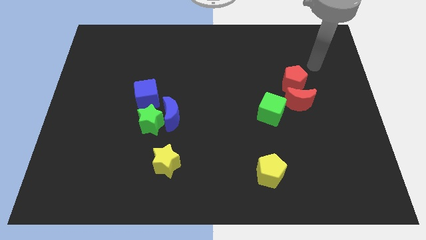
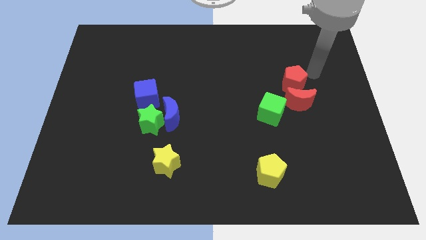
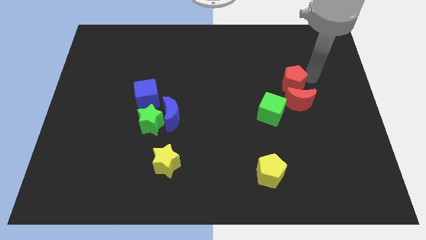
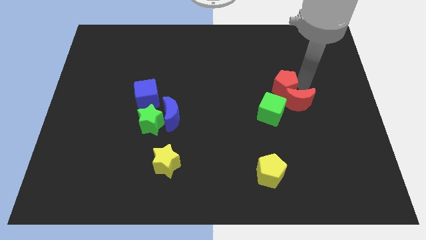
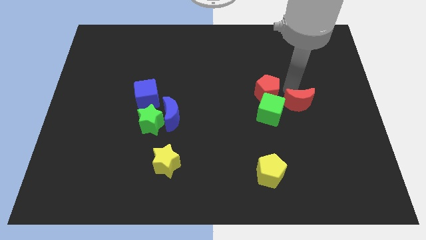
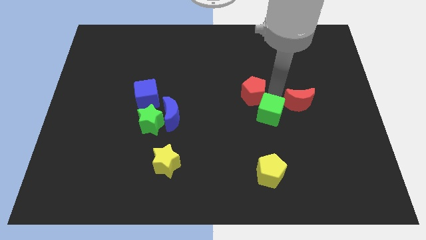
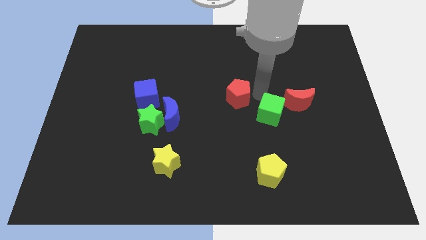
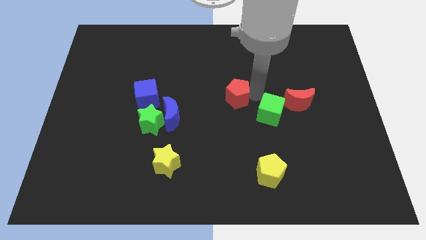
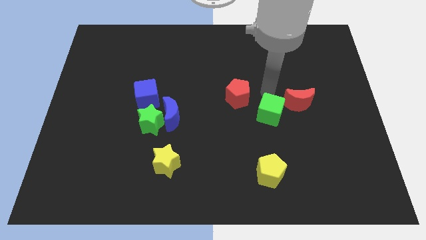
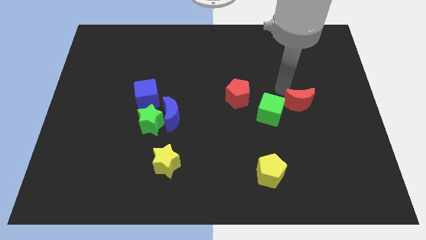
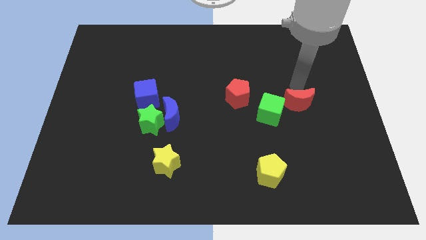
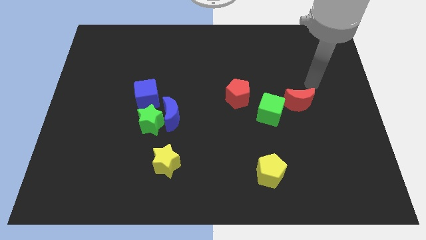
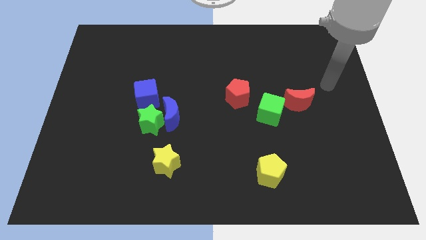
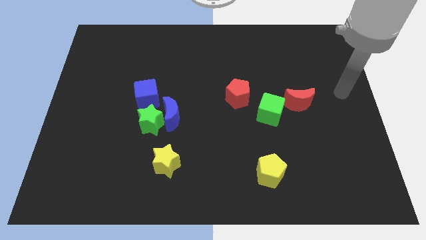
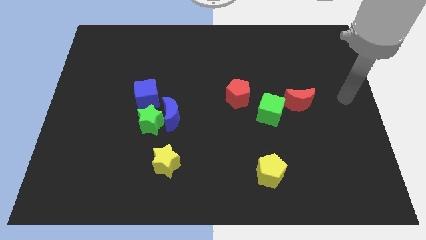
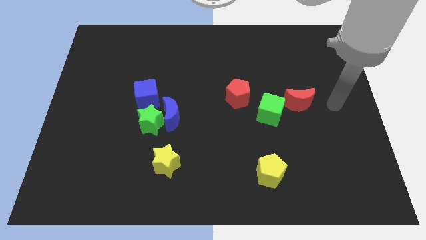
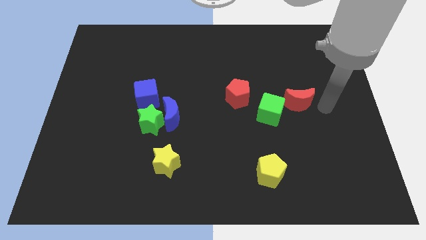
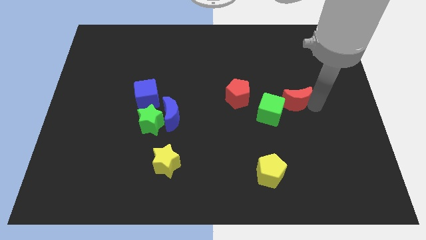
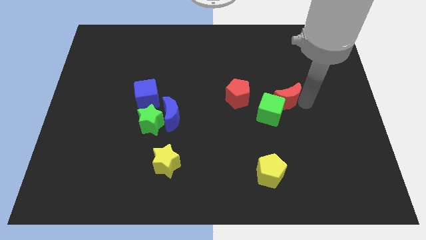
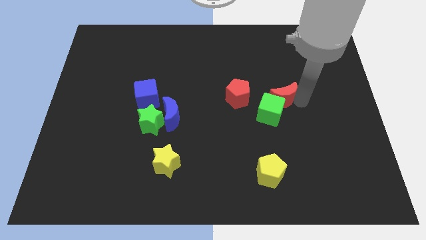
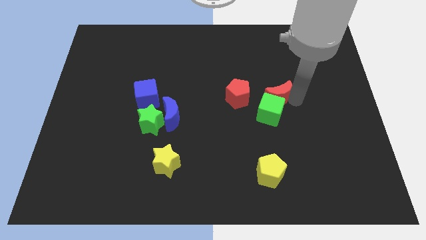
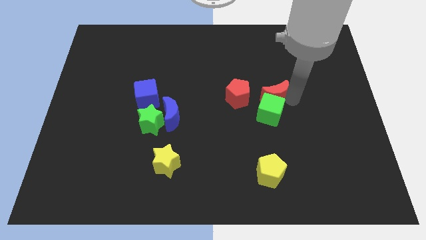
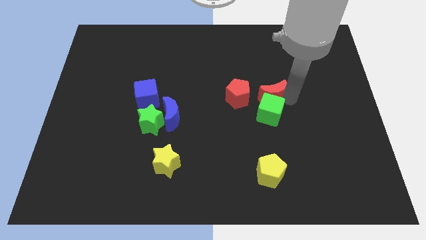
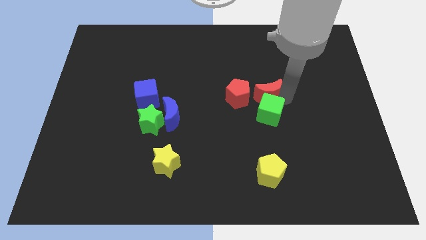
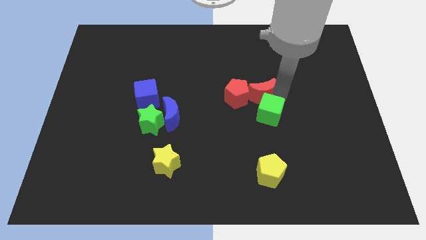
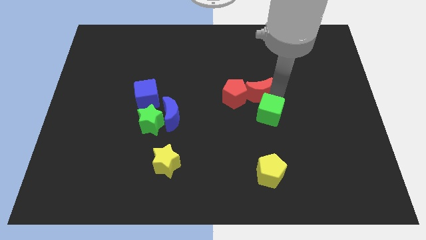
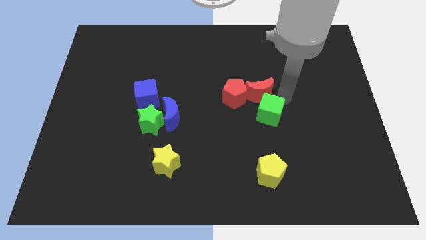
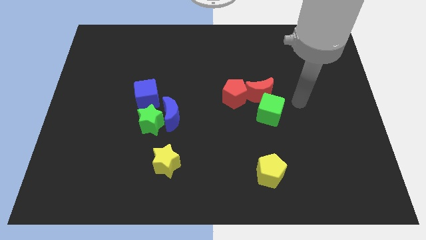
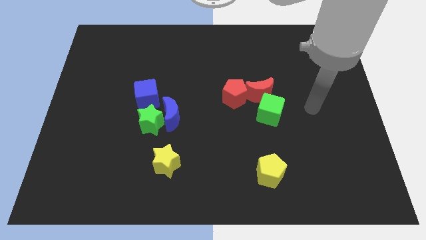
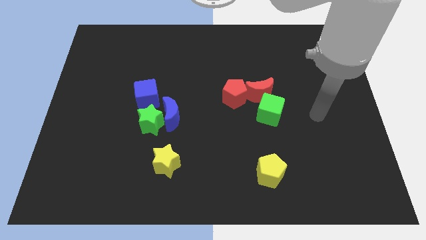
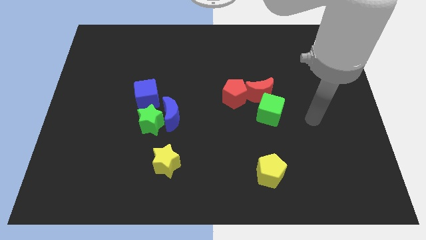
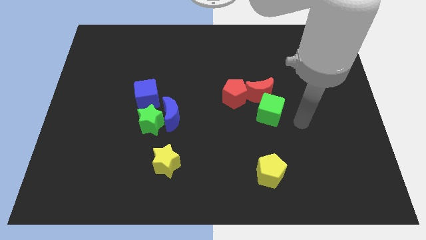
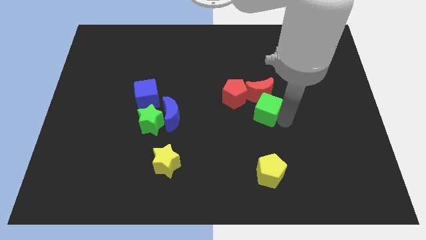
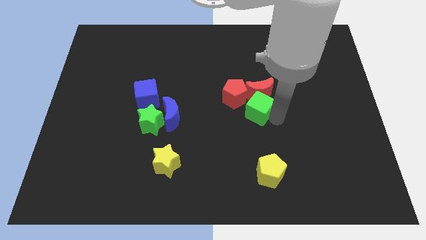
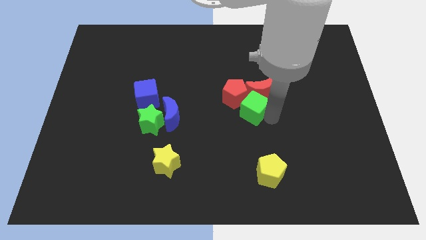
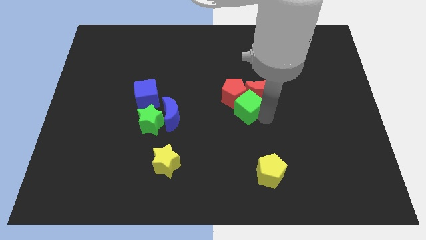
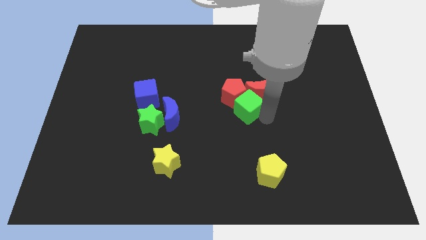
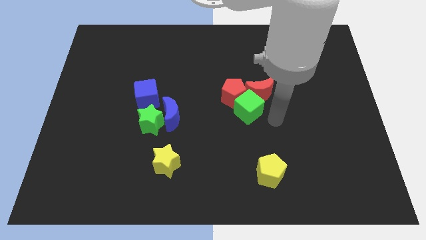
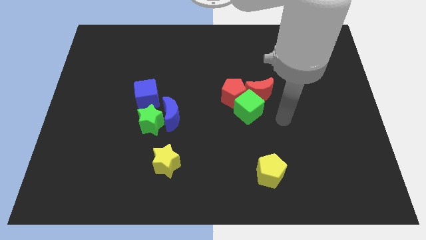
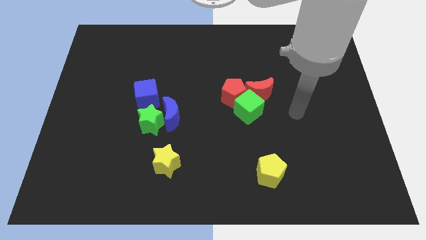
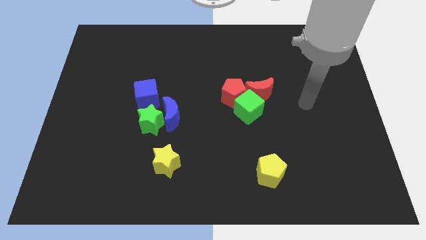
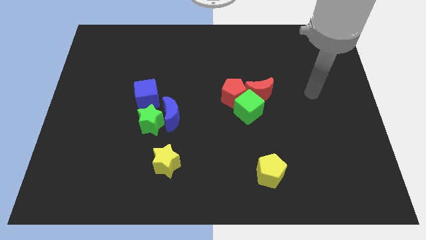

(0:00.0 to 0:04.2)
make a group with the green cube and red pentagon and red crescent

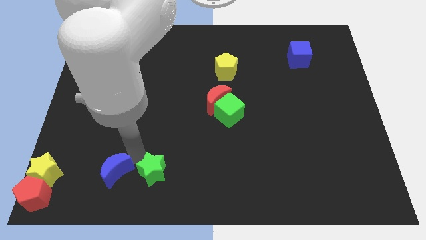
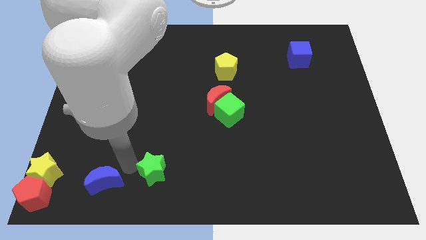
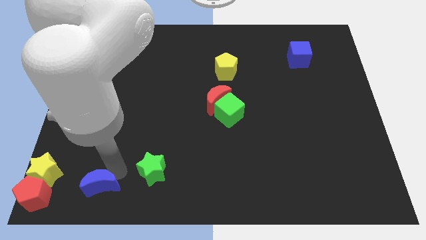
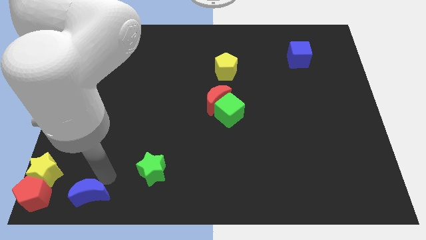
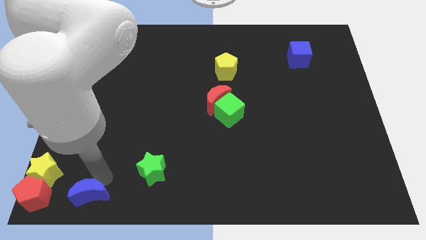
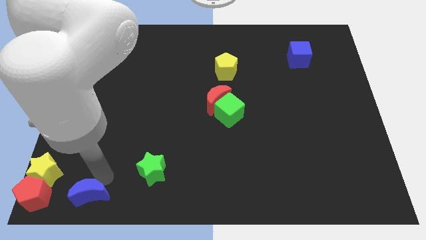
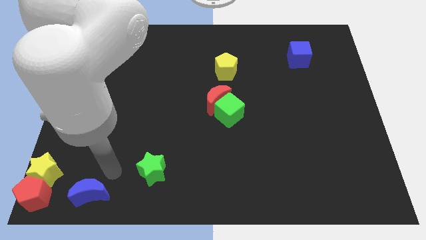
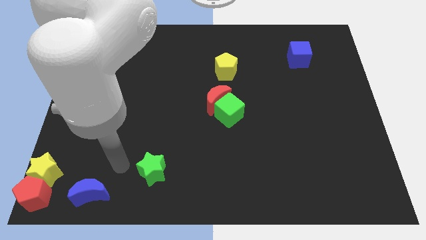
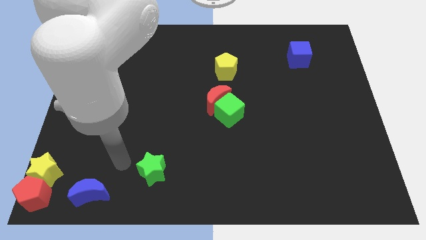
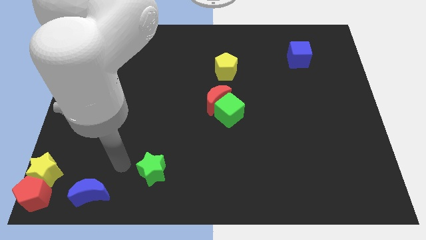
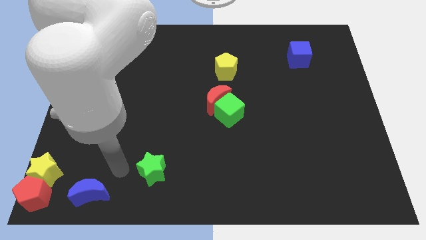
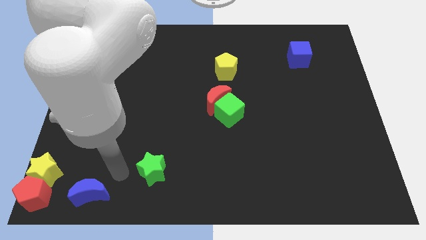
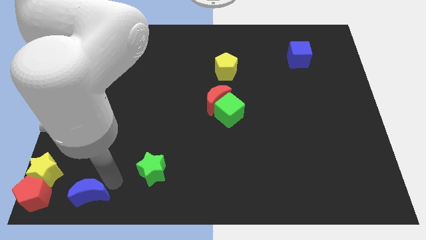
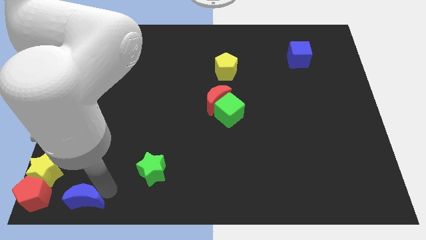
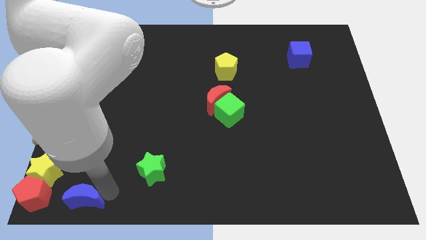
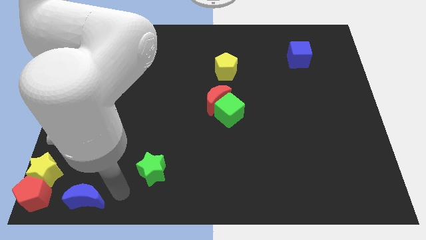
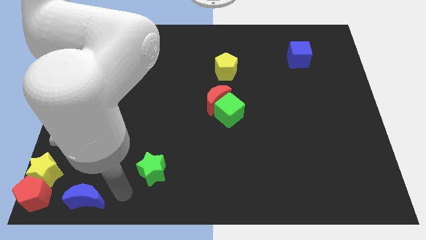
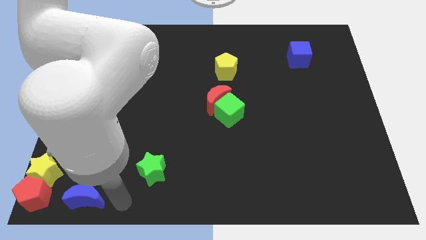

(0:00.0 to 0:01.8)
separate blue moon from green star

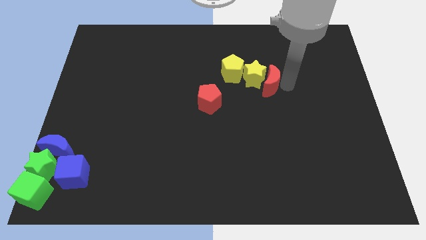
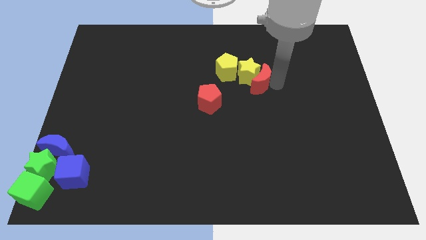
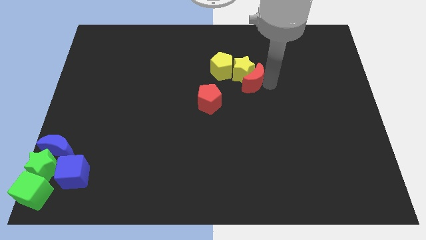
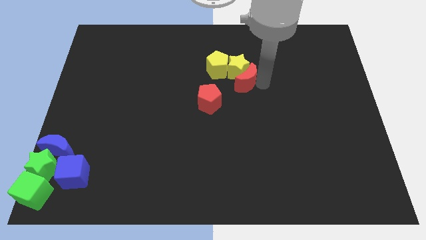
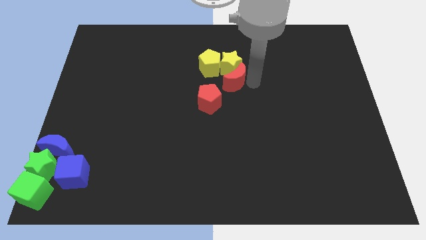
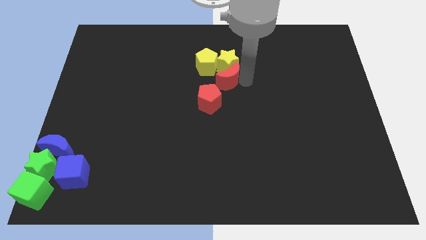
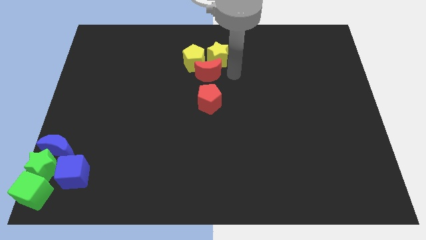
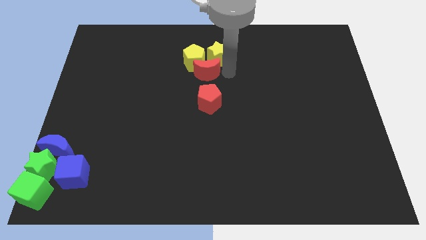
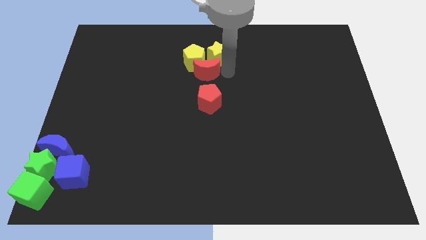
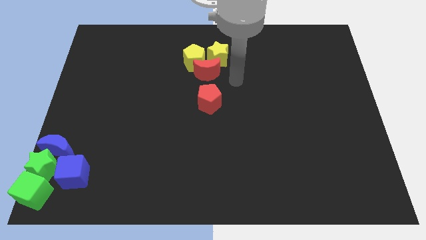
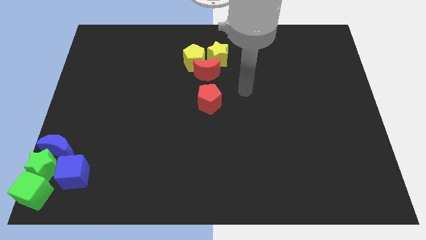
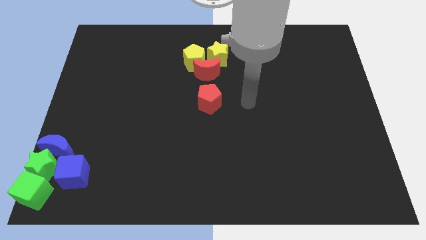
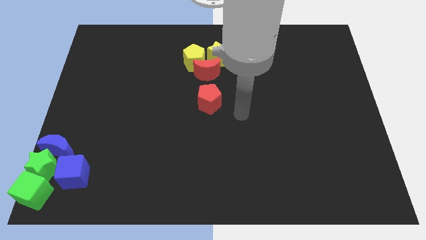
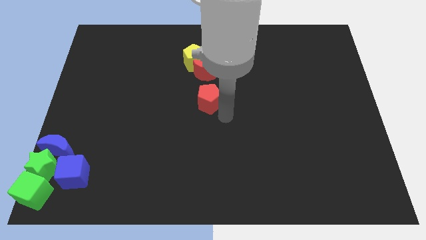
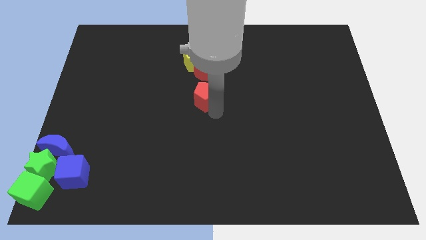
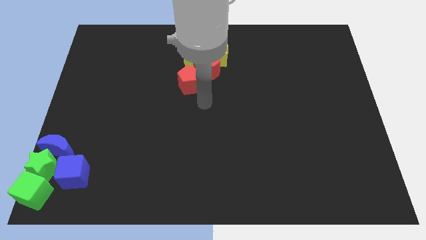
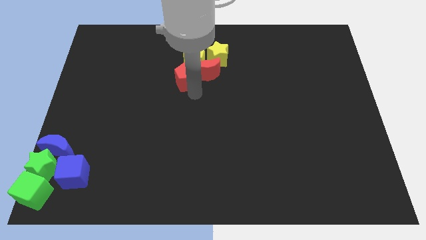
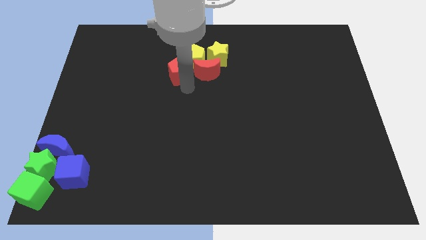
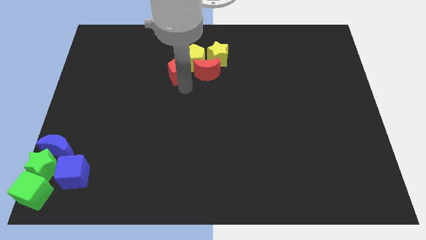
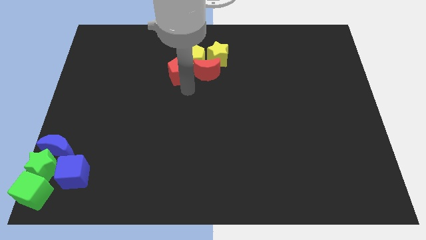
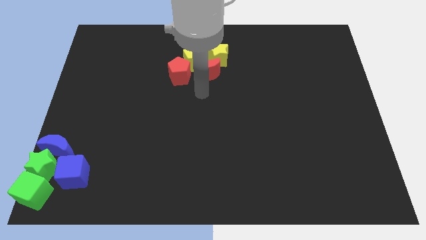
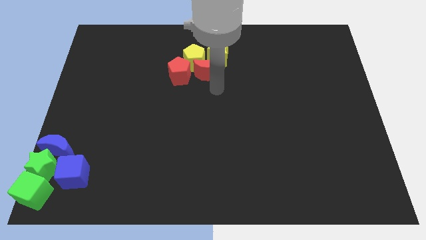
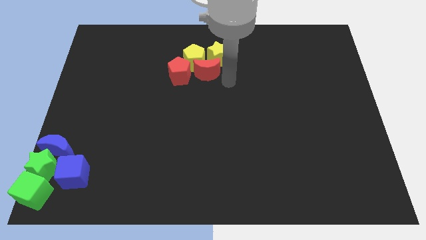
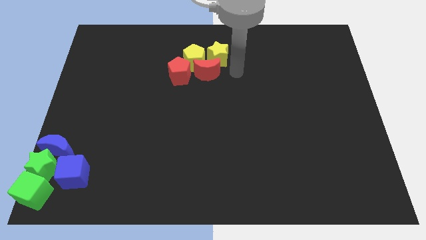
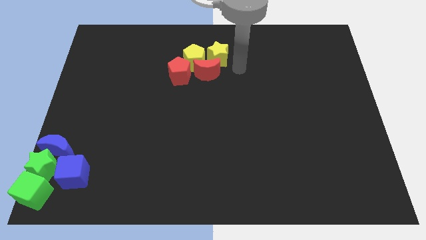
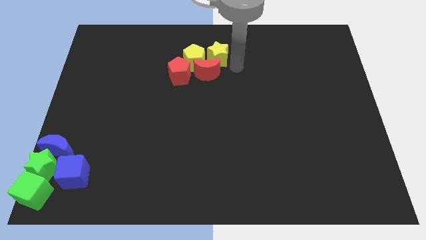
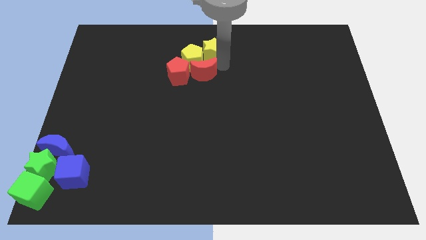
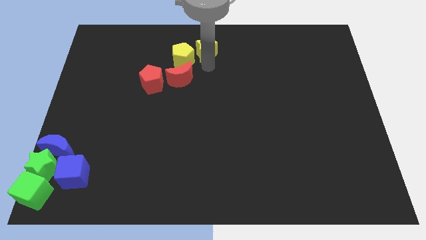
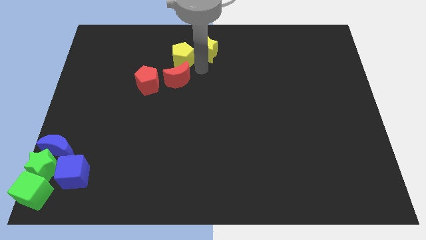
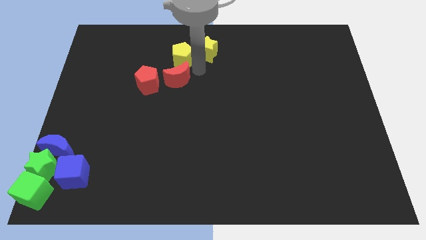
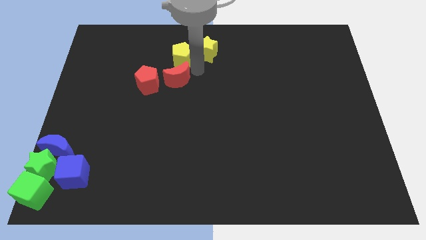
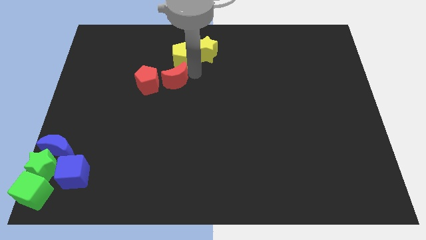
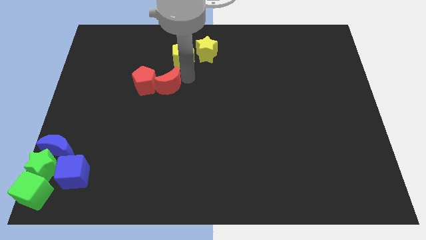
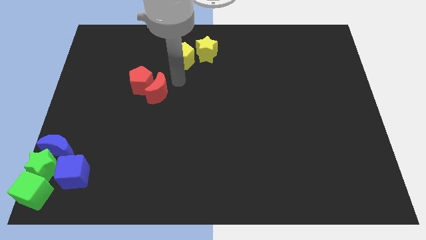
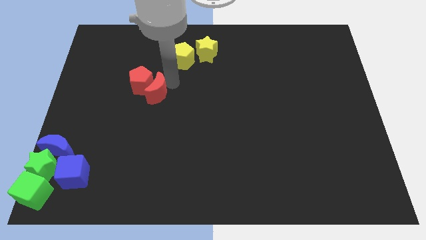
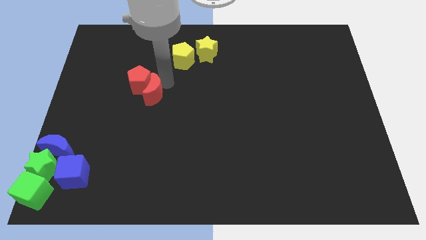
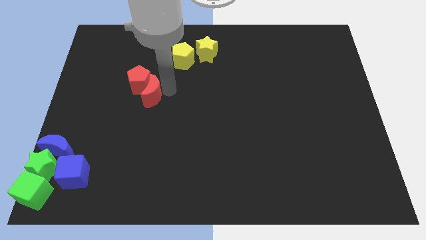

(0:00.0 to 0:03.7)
put the red crescent and red pentagon together
